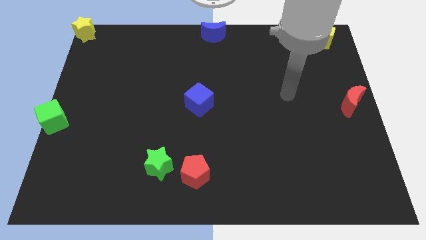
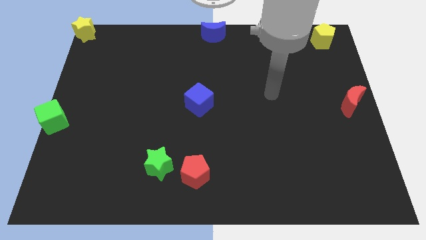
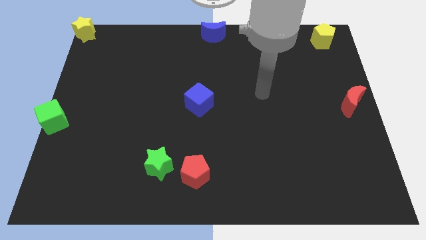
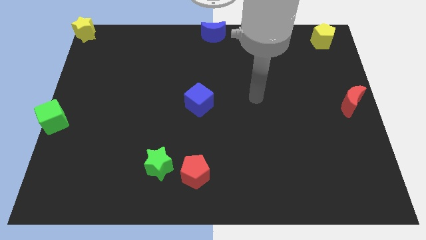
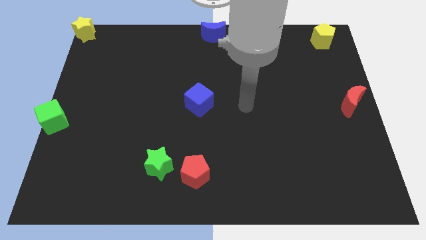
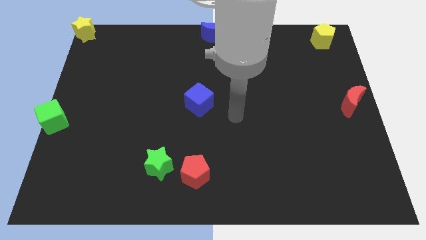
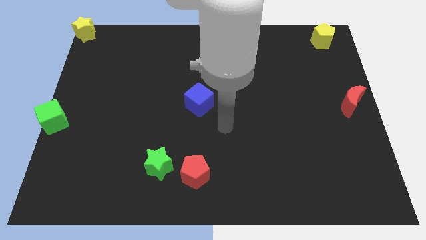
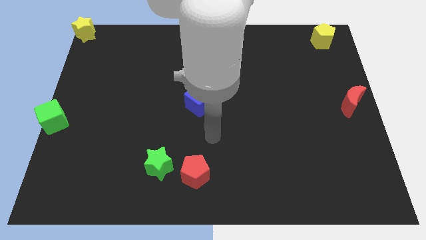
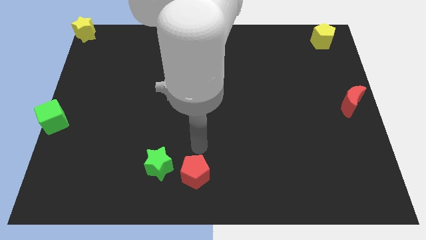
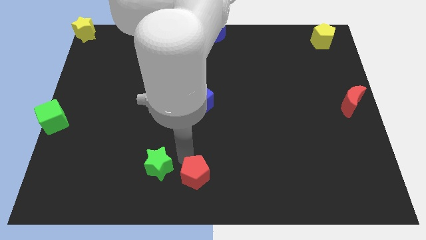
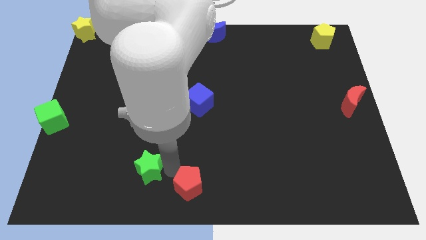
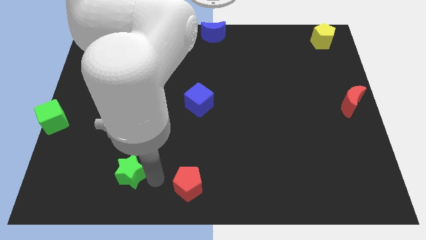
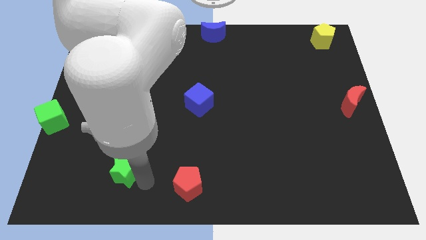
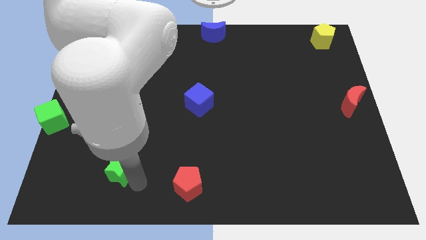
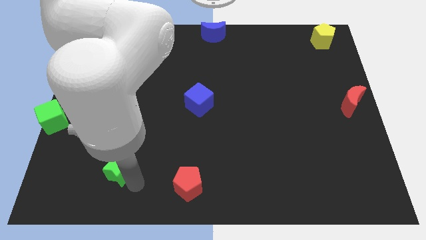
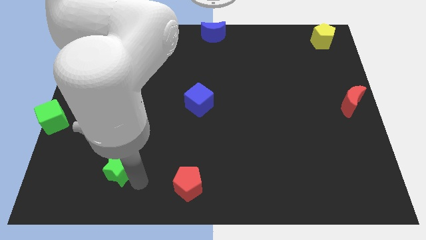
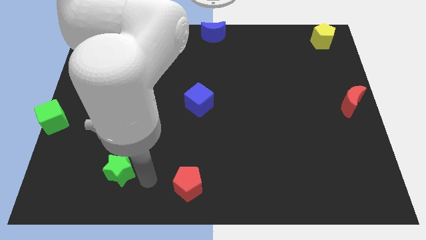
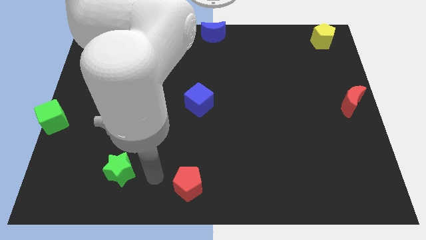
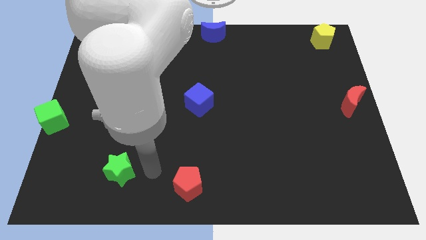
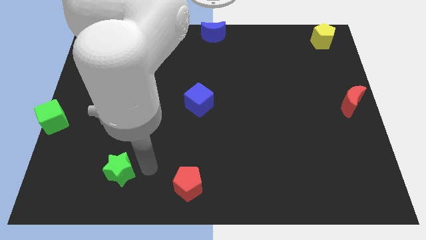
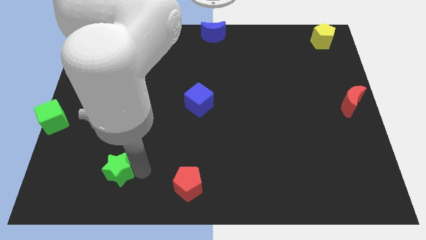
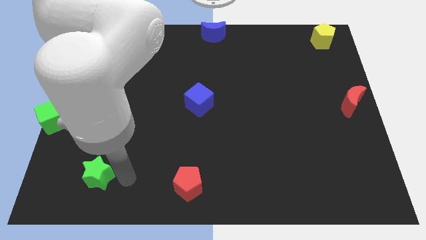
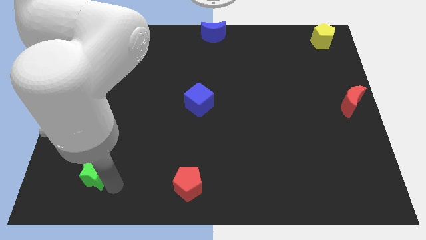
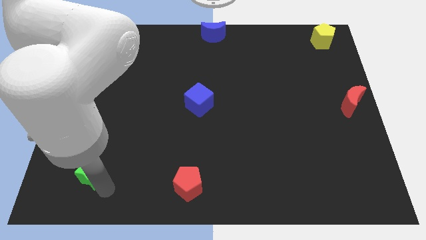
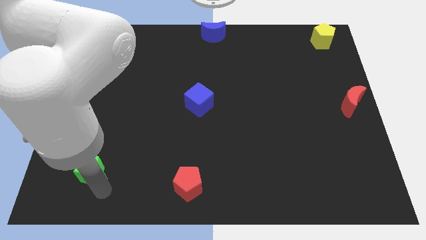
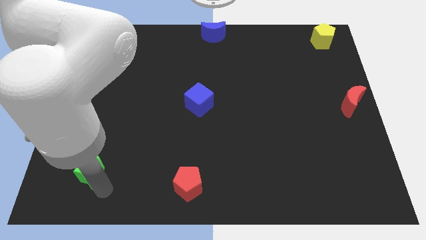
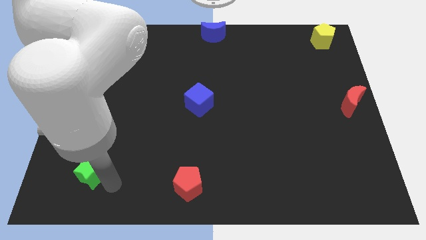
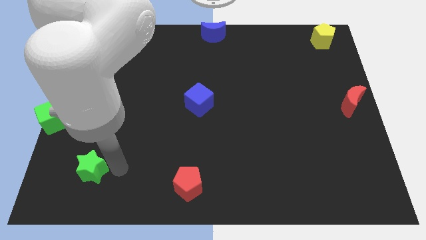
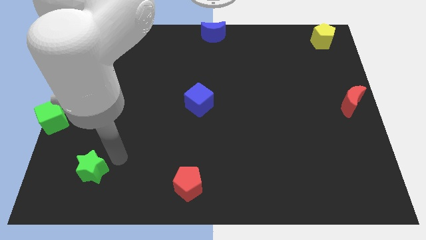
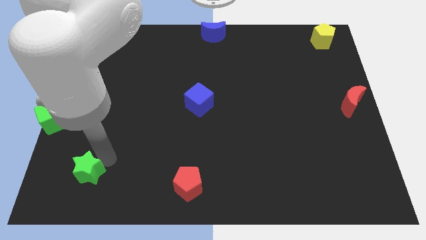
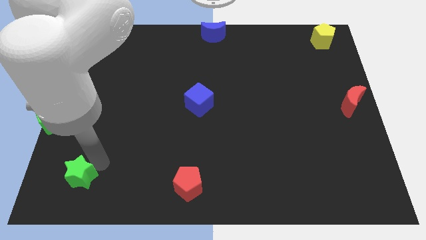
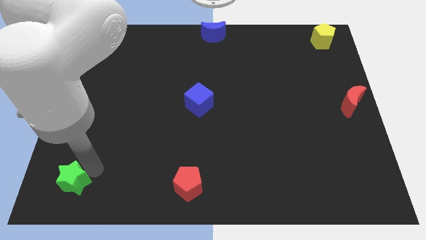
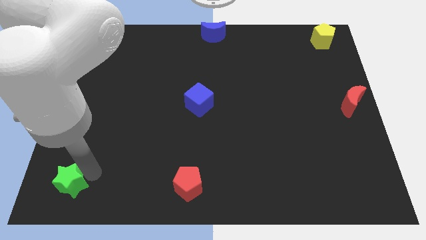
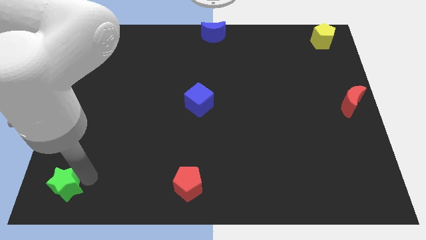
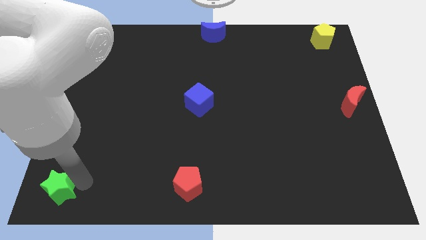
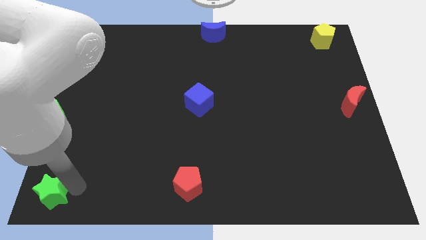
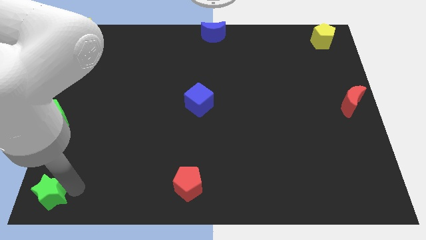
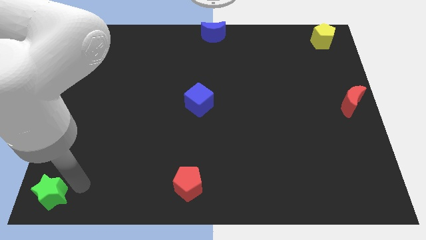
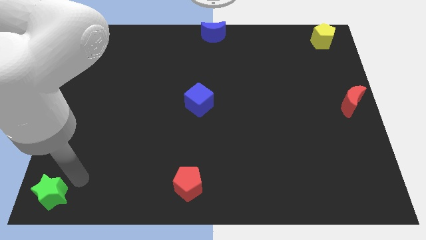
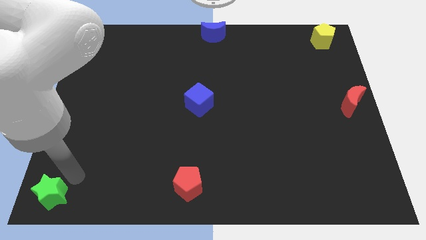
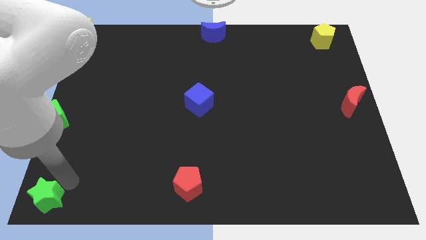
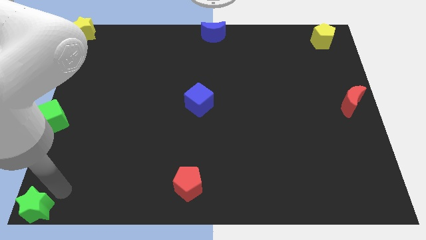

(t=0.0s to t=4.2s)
move green star to the bottom left

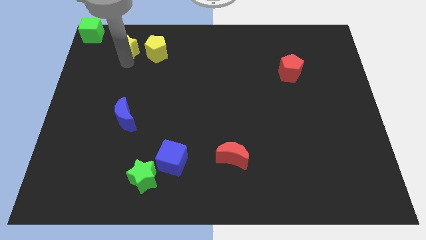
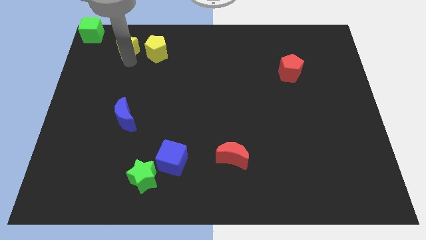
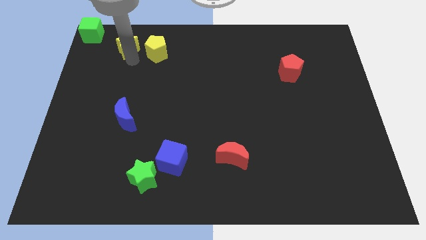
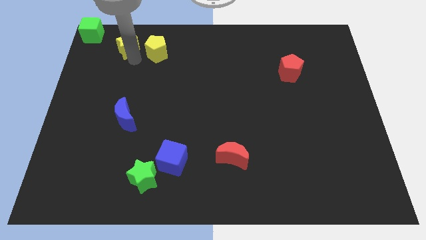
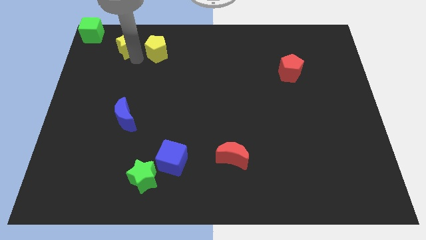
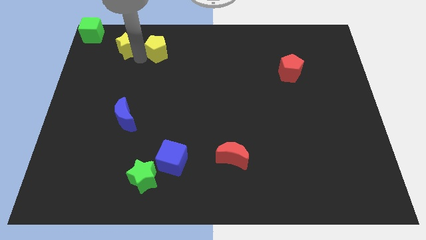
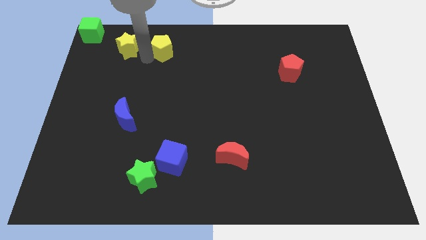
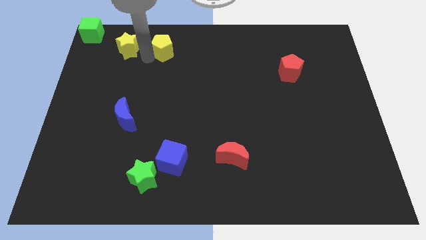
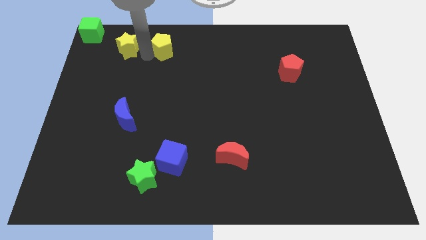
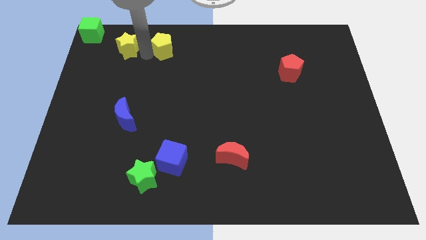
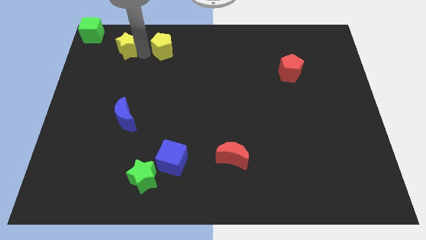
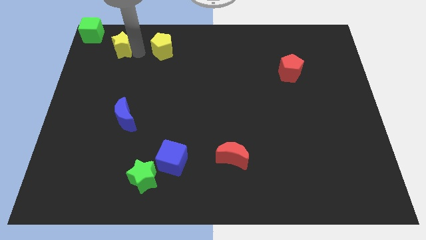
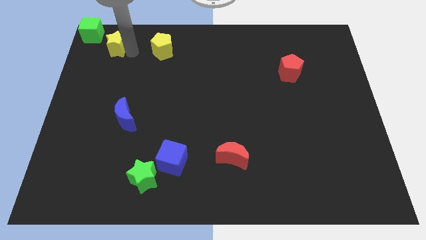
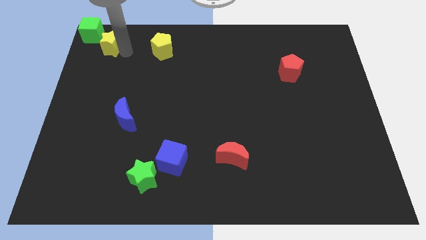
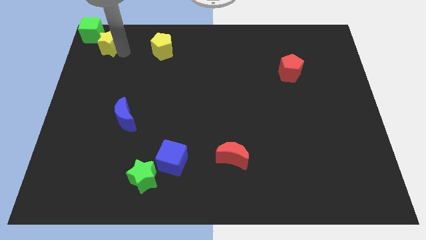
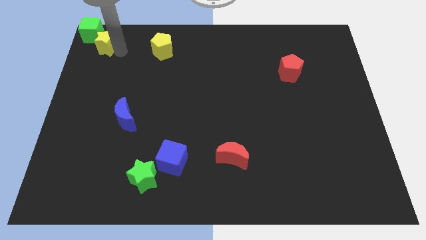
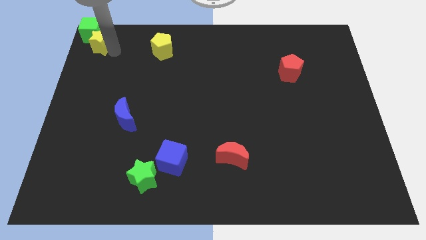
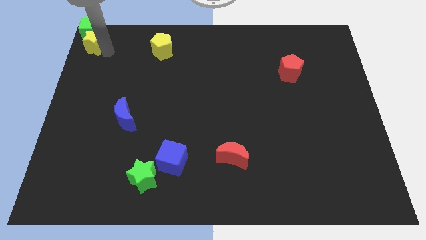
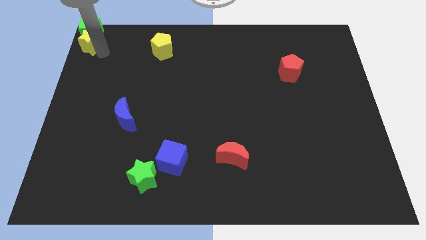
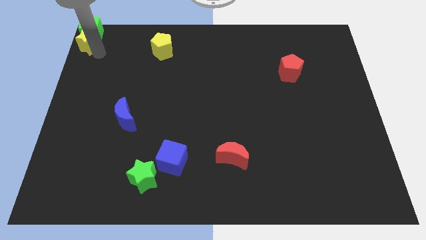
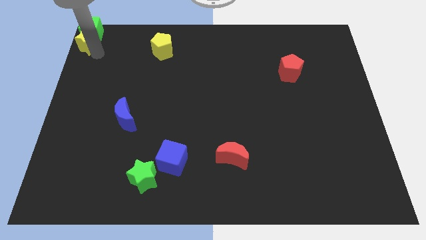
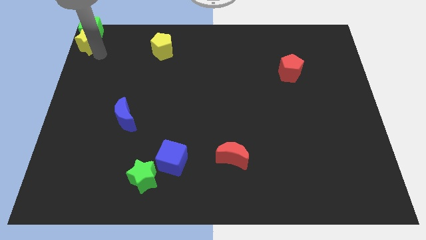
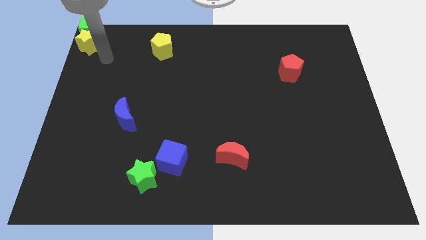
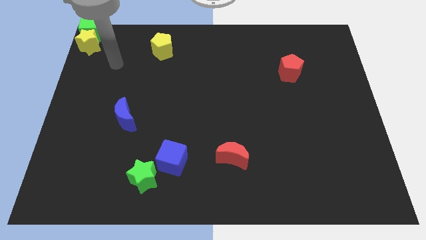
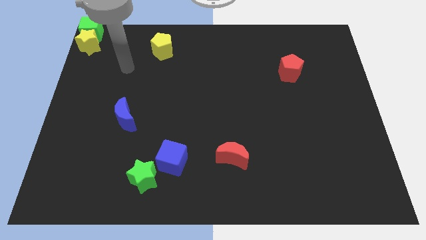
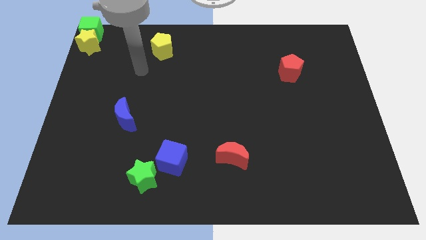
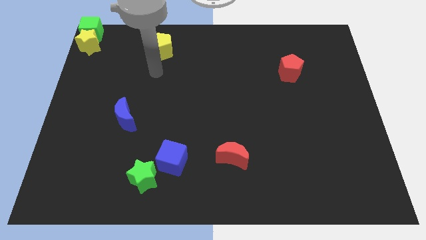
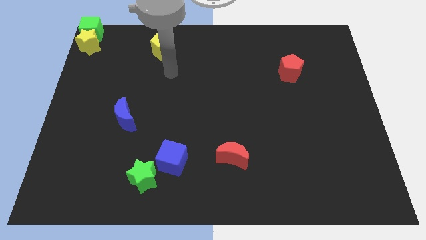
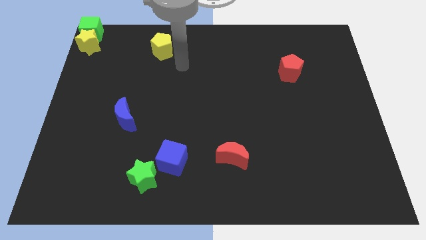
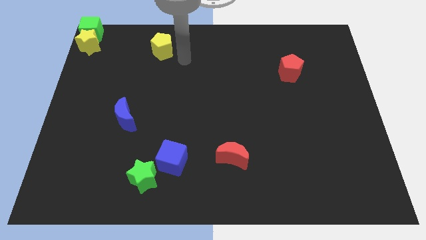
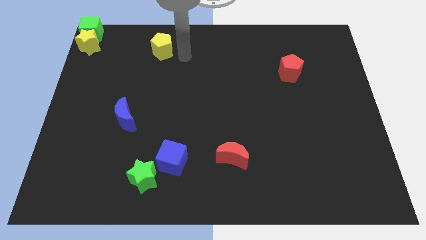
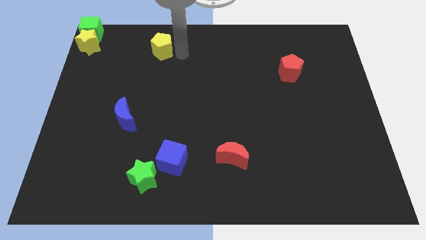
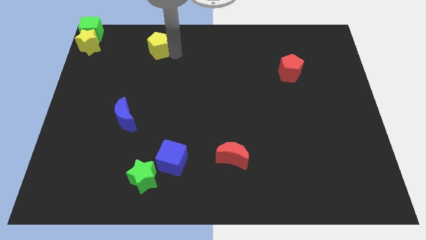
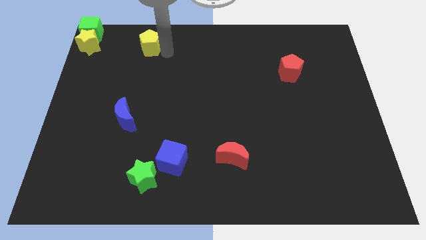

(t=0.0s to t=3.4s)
put the yellow star vertically below the green cube

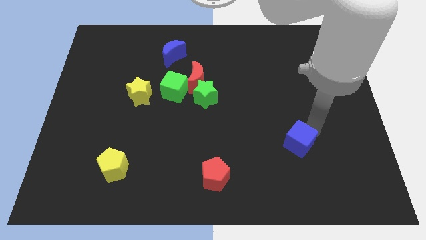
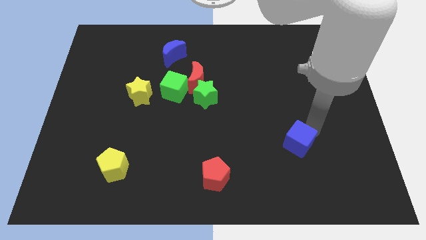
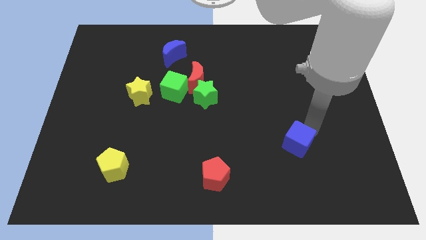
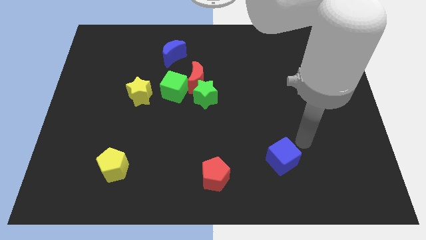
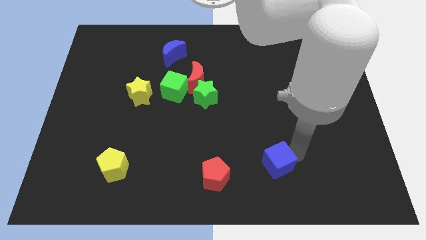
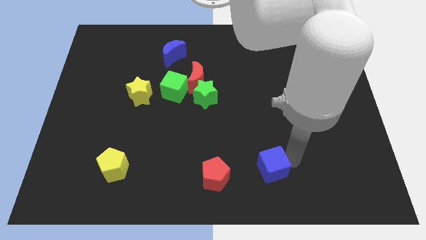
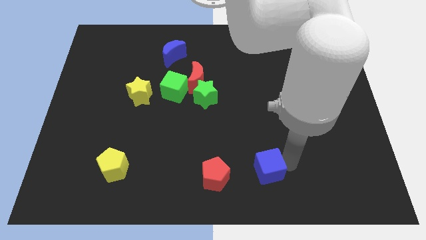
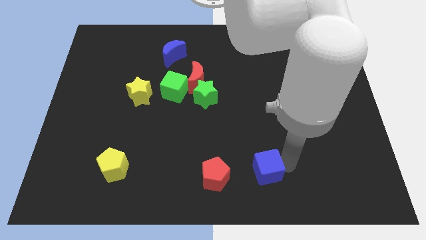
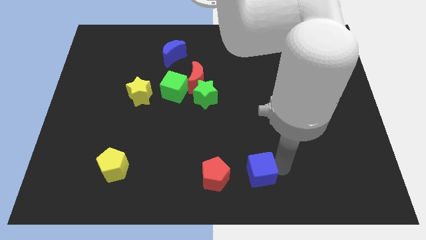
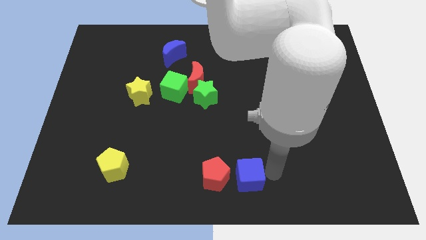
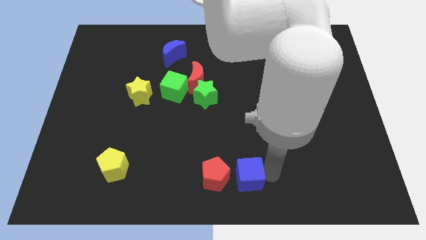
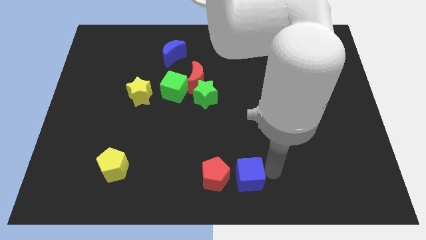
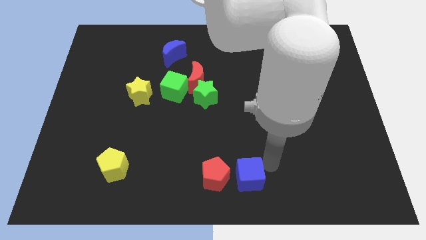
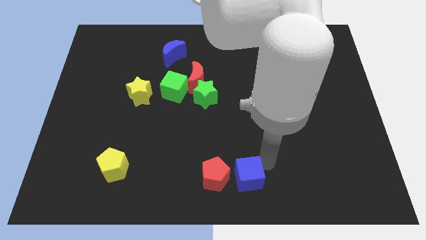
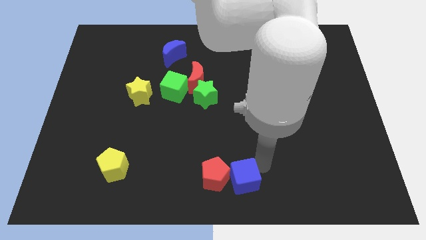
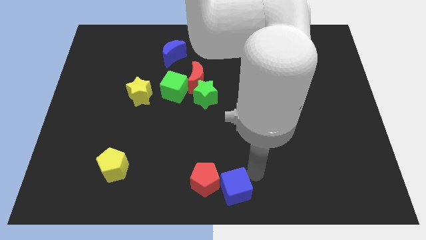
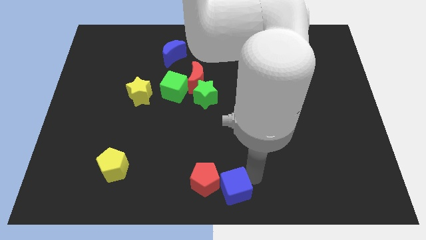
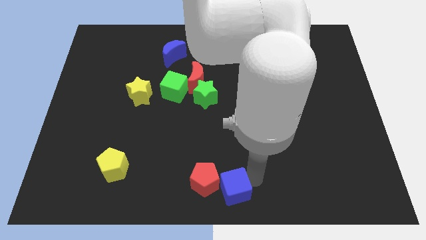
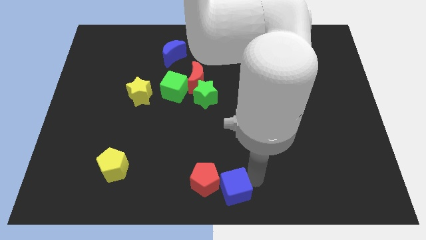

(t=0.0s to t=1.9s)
push the blue cube right to the red pentagon at the bottom center
